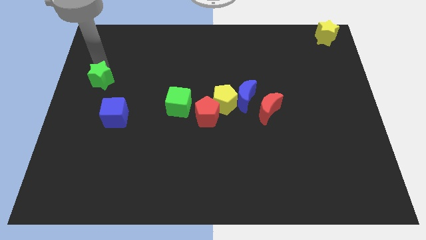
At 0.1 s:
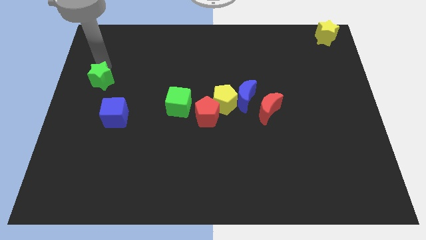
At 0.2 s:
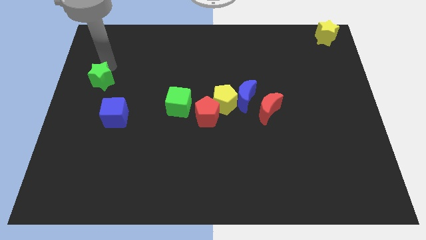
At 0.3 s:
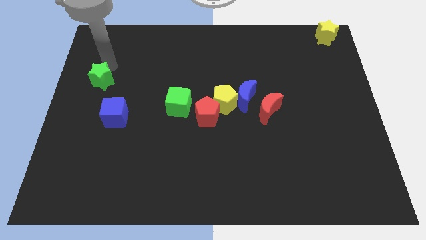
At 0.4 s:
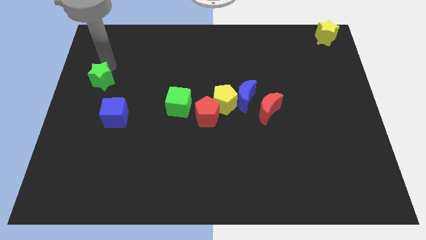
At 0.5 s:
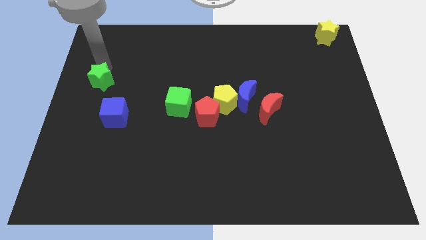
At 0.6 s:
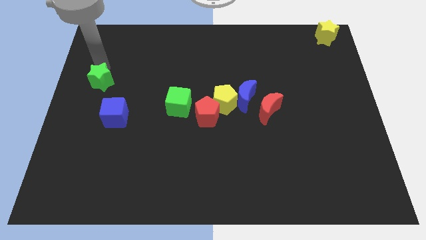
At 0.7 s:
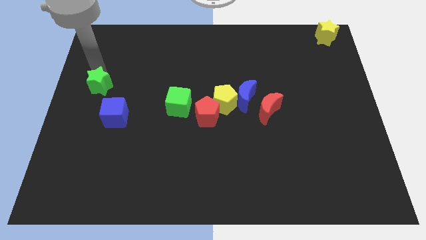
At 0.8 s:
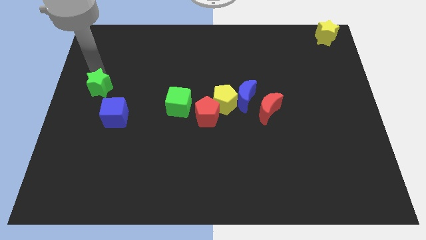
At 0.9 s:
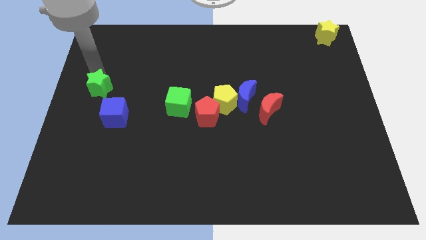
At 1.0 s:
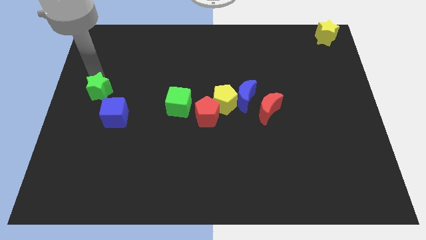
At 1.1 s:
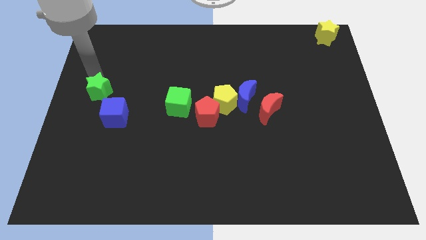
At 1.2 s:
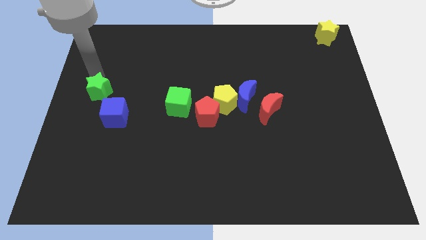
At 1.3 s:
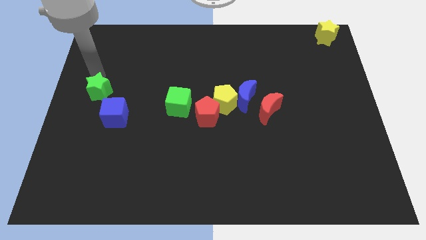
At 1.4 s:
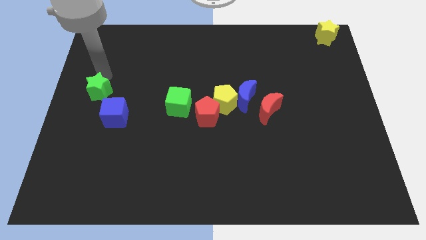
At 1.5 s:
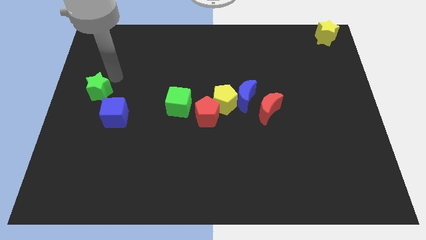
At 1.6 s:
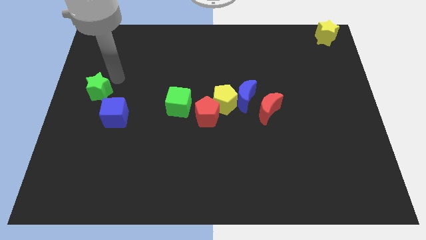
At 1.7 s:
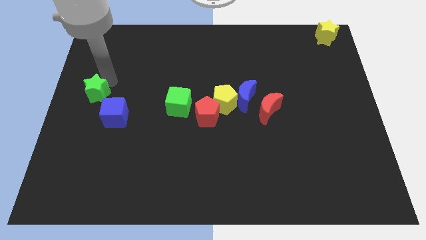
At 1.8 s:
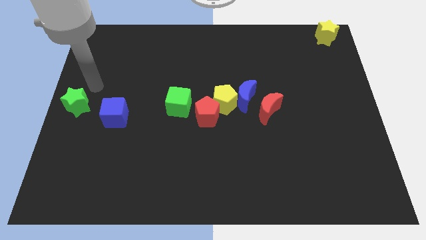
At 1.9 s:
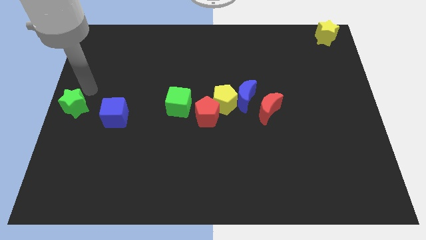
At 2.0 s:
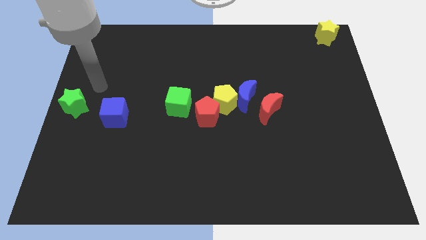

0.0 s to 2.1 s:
place the green star at the center left of the board

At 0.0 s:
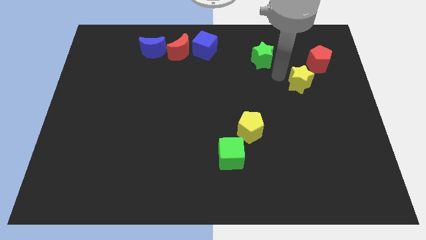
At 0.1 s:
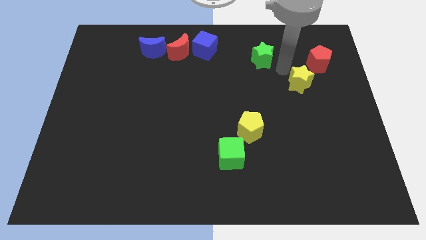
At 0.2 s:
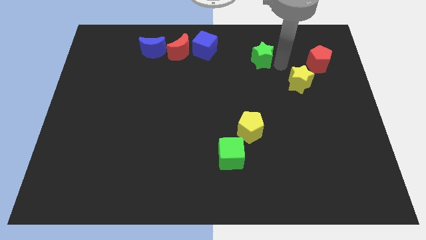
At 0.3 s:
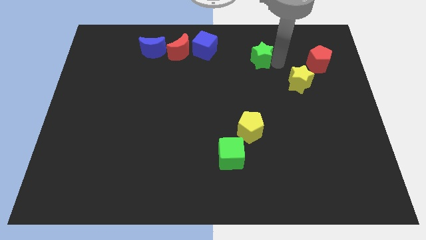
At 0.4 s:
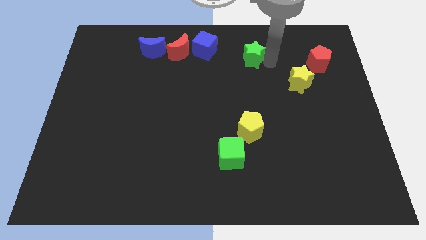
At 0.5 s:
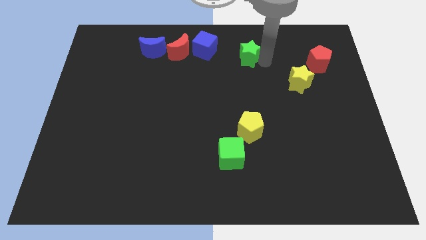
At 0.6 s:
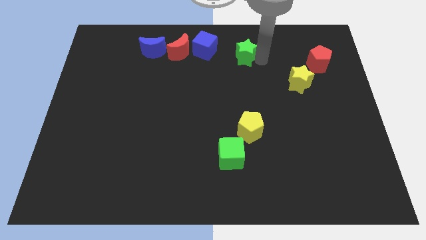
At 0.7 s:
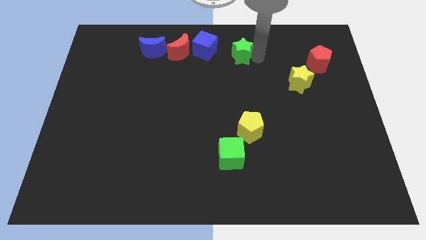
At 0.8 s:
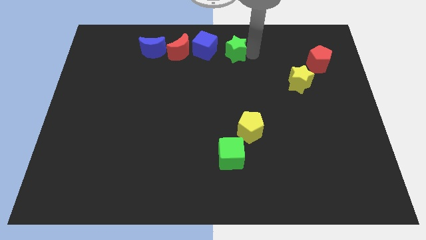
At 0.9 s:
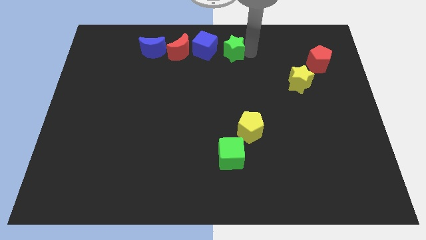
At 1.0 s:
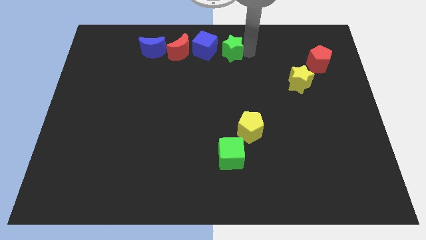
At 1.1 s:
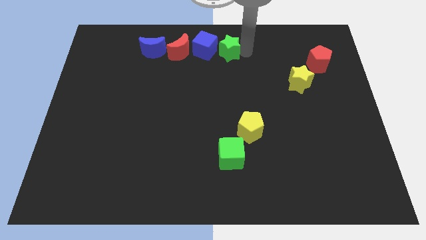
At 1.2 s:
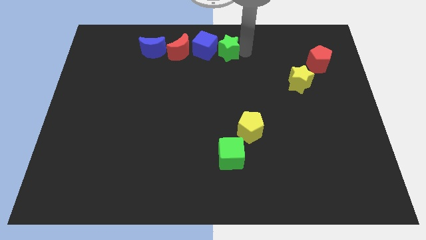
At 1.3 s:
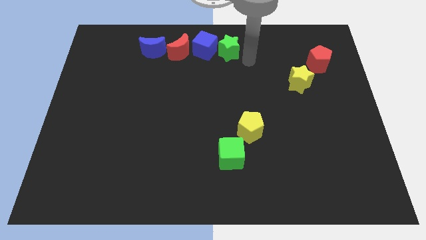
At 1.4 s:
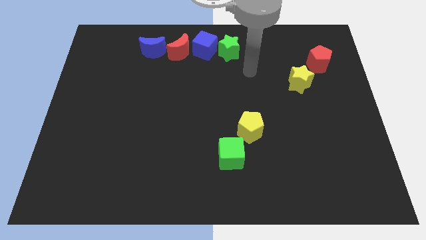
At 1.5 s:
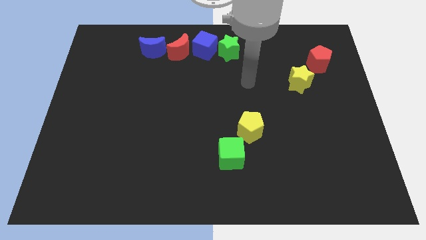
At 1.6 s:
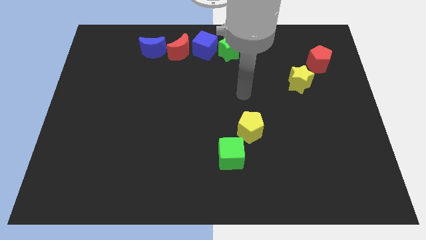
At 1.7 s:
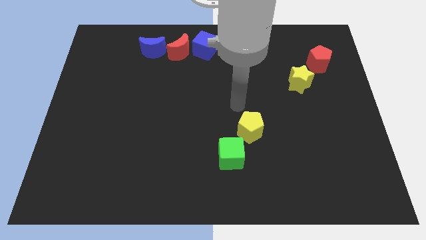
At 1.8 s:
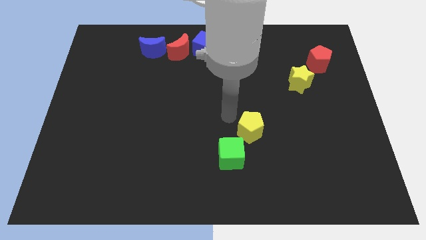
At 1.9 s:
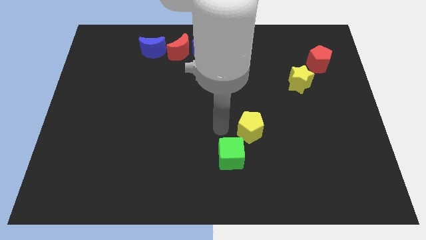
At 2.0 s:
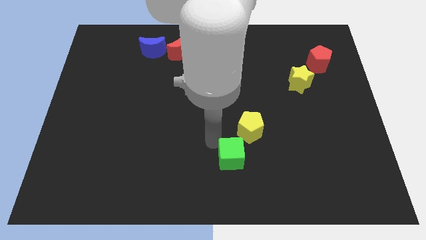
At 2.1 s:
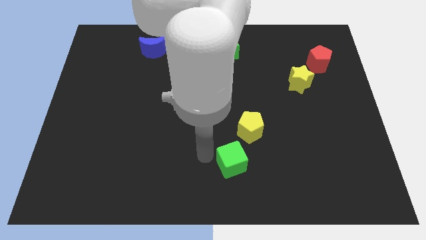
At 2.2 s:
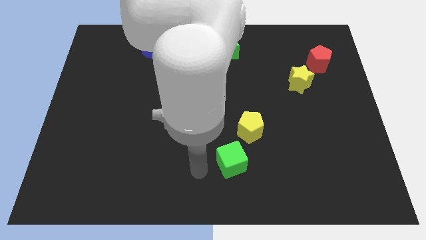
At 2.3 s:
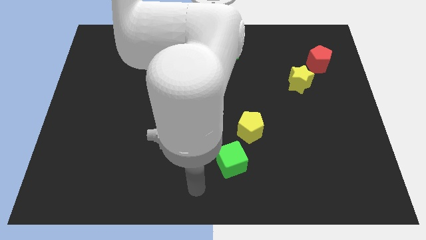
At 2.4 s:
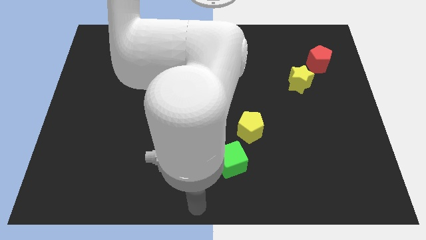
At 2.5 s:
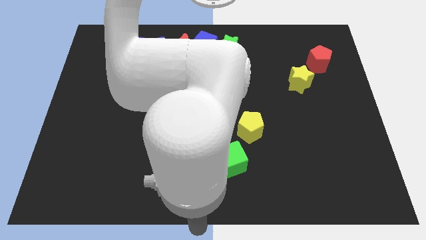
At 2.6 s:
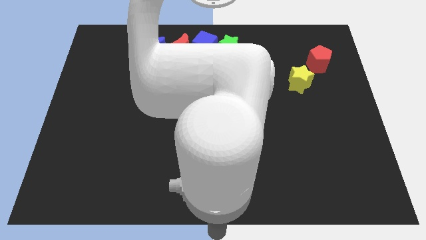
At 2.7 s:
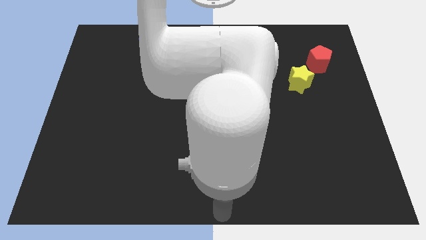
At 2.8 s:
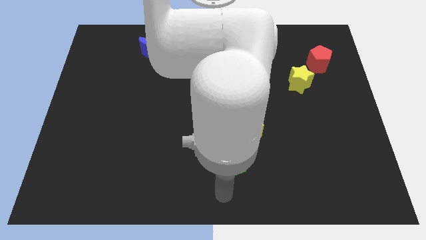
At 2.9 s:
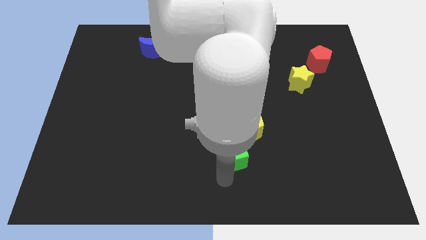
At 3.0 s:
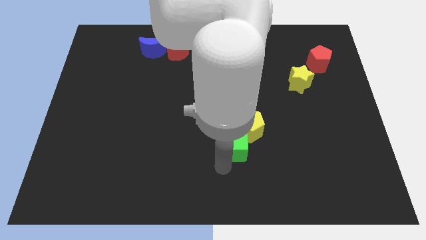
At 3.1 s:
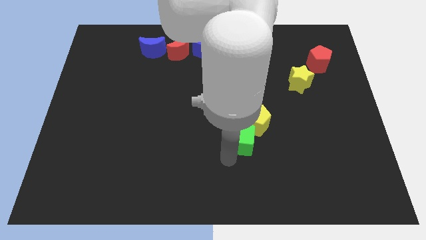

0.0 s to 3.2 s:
move the green cube slightly to the top

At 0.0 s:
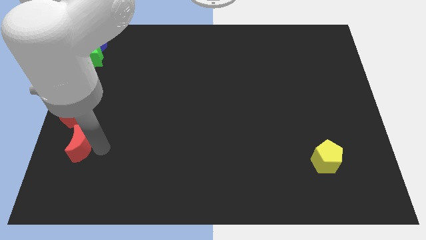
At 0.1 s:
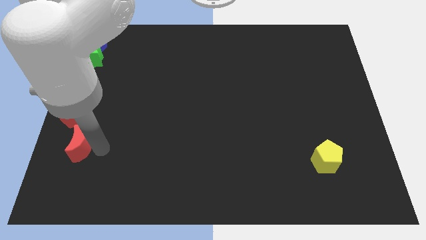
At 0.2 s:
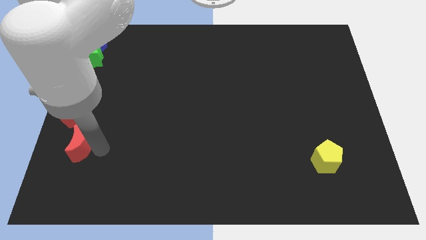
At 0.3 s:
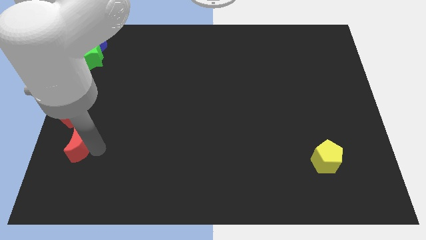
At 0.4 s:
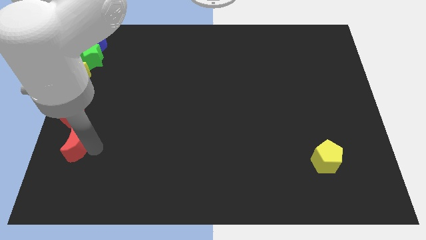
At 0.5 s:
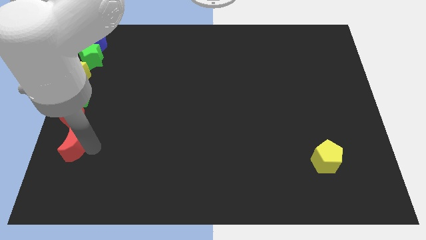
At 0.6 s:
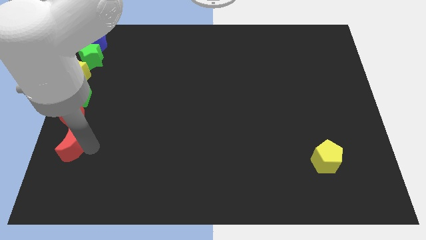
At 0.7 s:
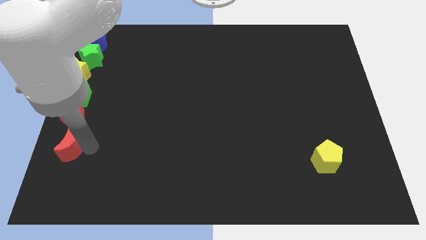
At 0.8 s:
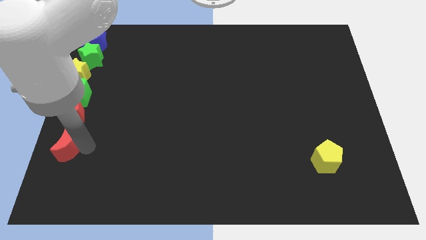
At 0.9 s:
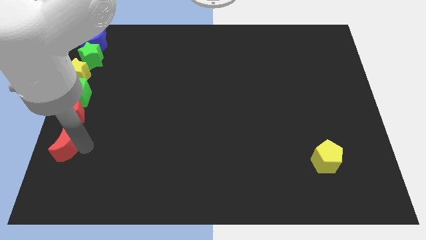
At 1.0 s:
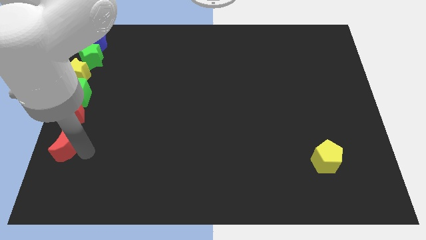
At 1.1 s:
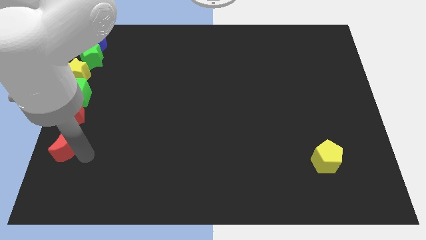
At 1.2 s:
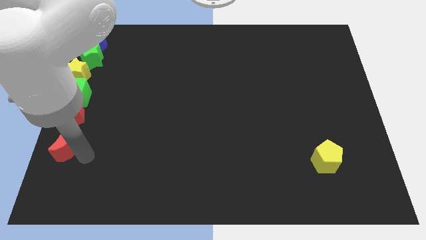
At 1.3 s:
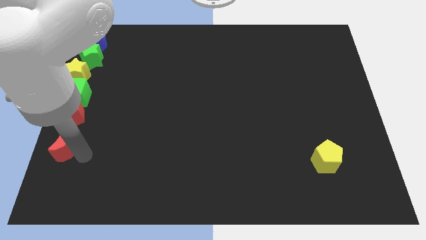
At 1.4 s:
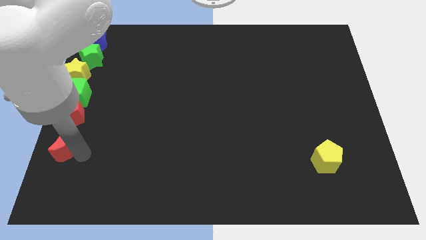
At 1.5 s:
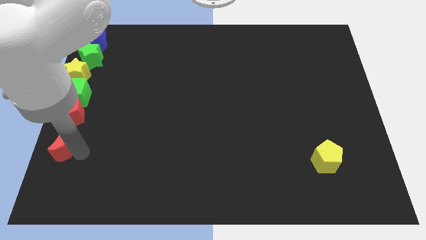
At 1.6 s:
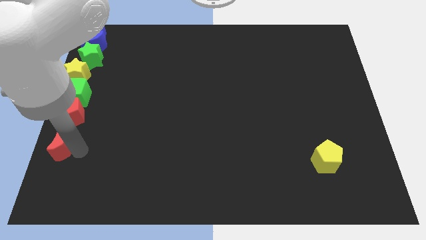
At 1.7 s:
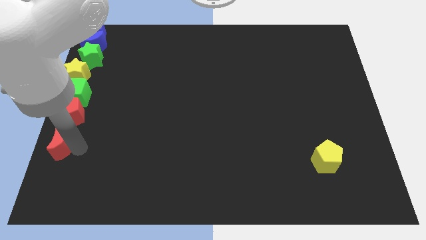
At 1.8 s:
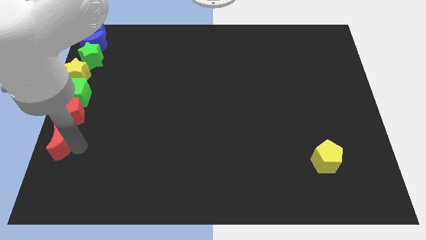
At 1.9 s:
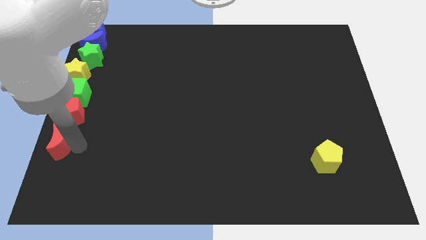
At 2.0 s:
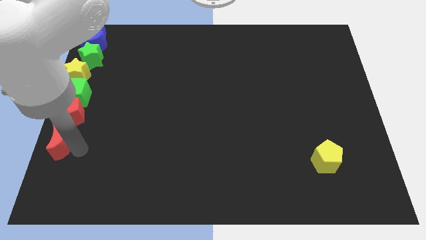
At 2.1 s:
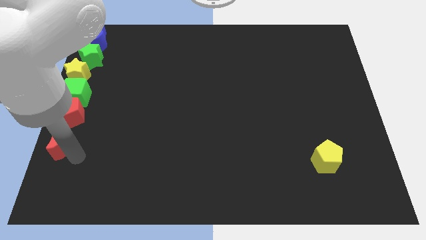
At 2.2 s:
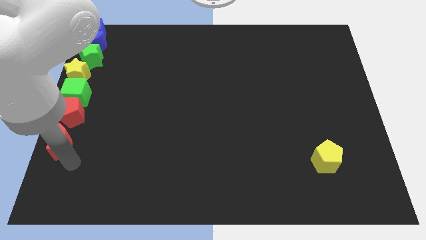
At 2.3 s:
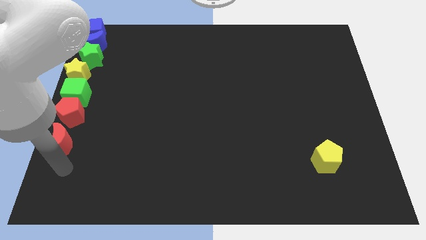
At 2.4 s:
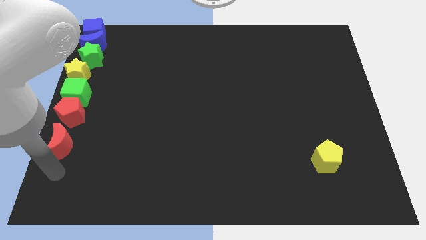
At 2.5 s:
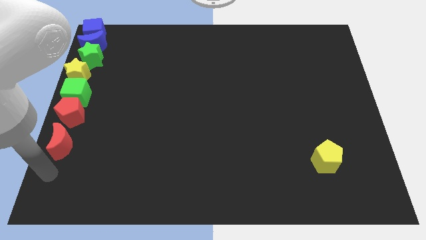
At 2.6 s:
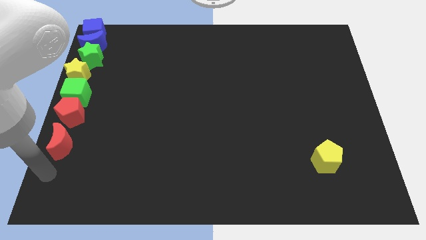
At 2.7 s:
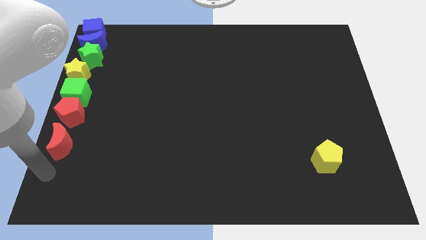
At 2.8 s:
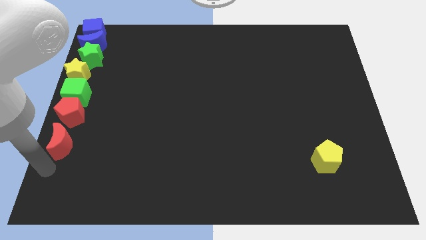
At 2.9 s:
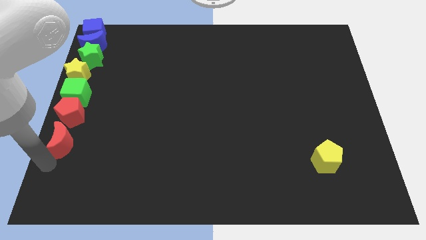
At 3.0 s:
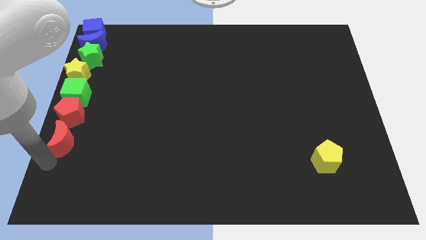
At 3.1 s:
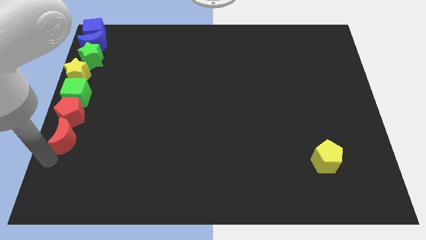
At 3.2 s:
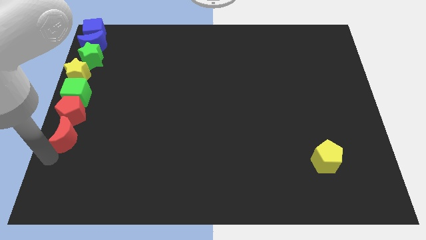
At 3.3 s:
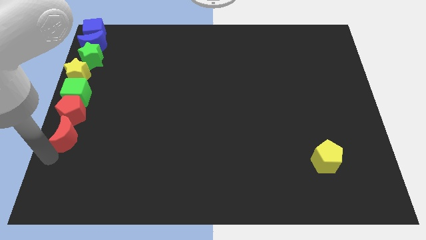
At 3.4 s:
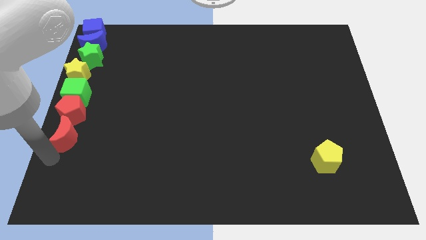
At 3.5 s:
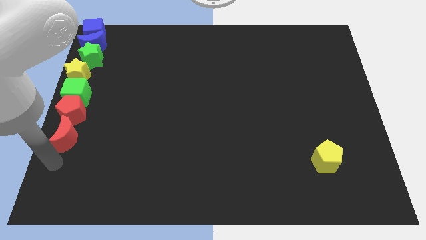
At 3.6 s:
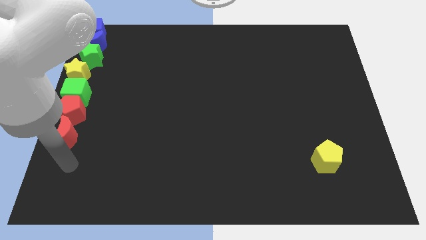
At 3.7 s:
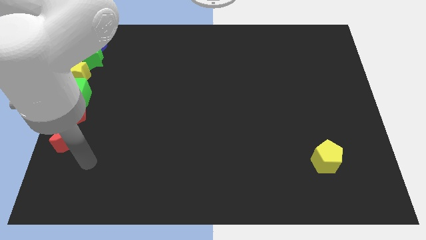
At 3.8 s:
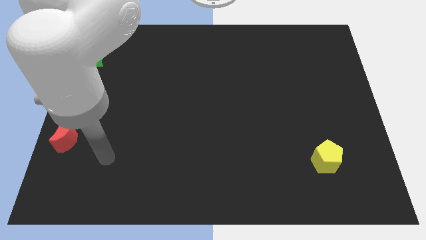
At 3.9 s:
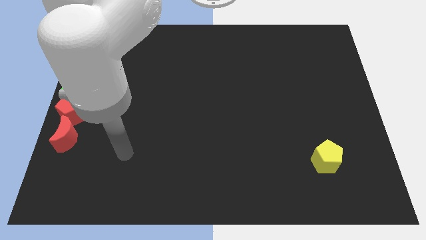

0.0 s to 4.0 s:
push the red moon into red pentagon
